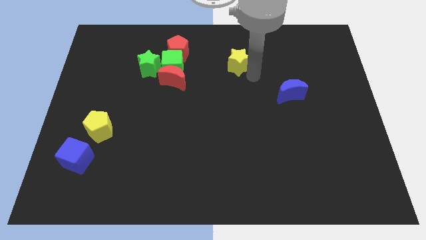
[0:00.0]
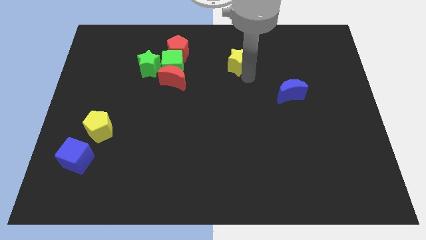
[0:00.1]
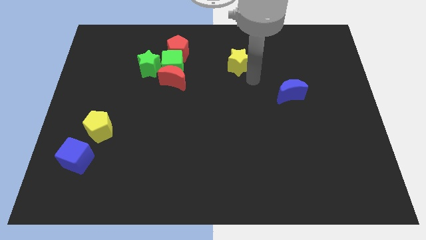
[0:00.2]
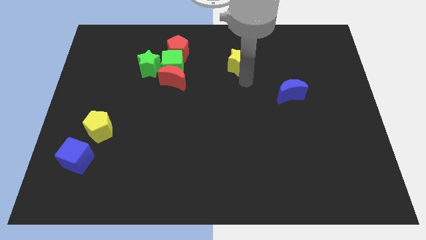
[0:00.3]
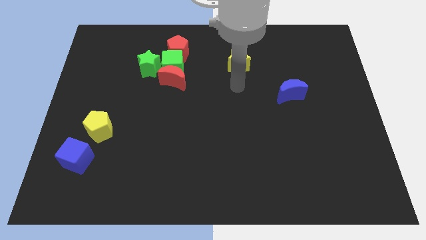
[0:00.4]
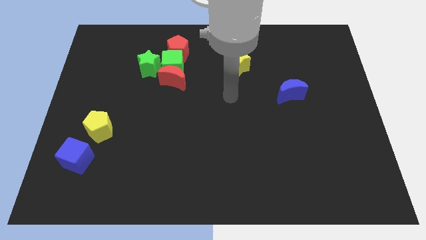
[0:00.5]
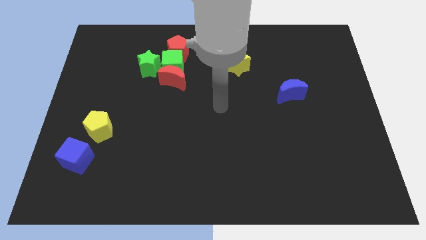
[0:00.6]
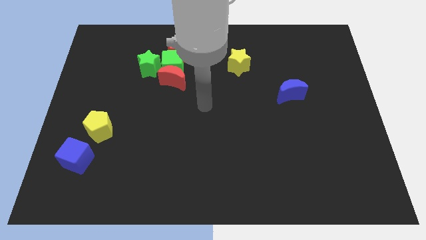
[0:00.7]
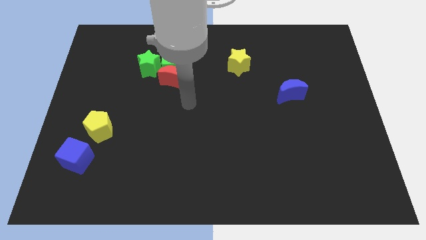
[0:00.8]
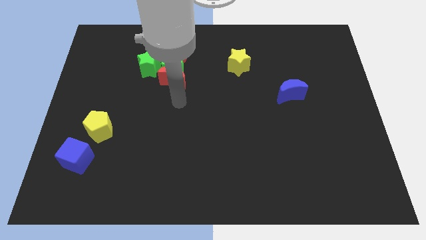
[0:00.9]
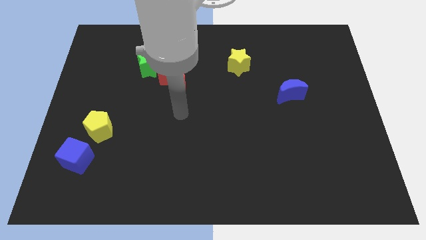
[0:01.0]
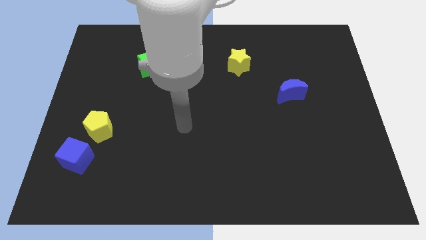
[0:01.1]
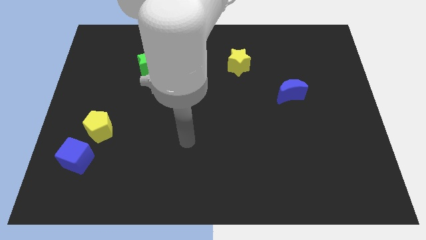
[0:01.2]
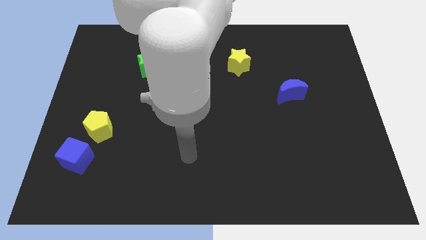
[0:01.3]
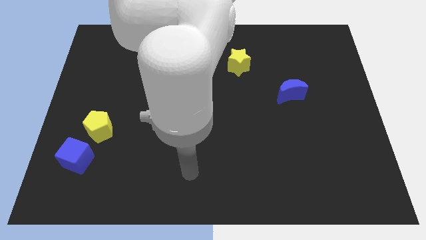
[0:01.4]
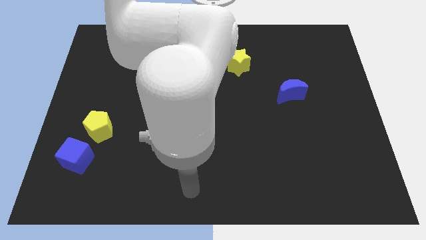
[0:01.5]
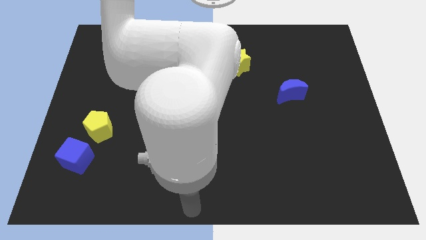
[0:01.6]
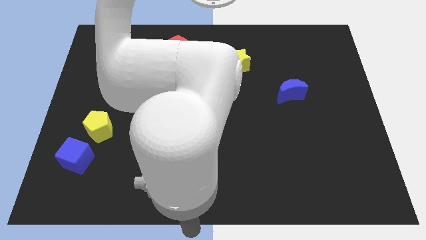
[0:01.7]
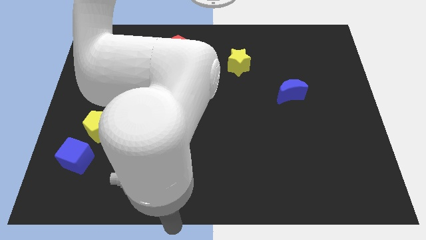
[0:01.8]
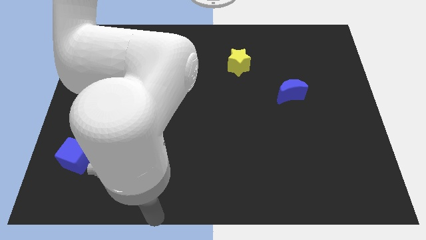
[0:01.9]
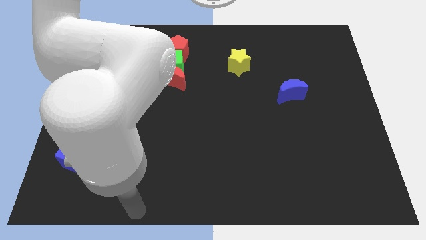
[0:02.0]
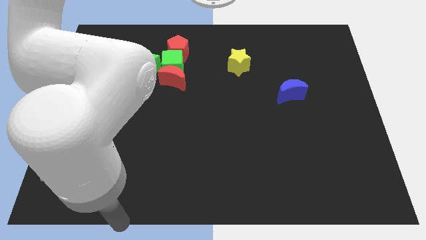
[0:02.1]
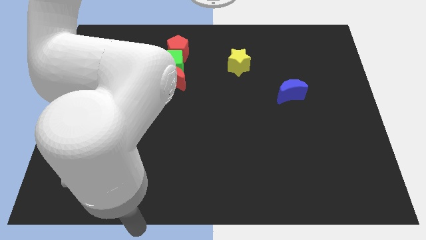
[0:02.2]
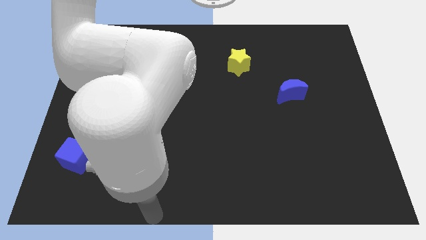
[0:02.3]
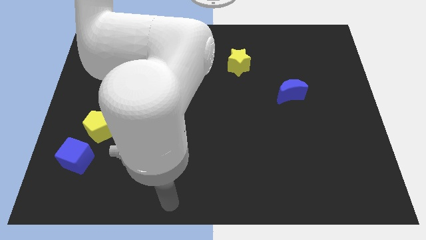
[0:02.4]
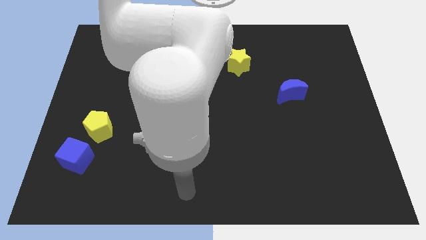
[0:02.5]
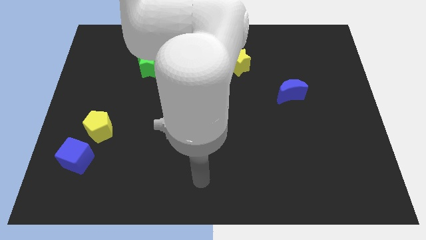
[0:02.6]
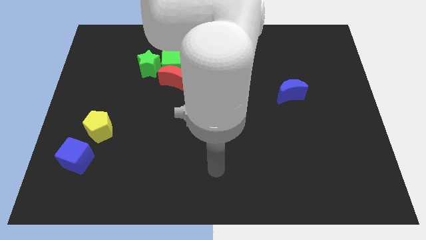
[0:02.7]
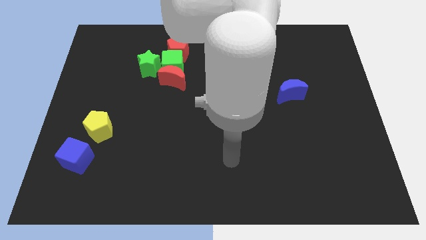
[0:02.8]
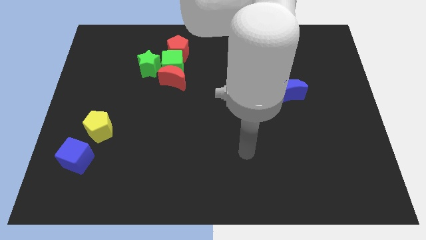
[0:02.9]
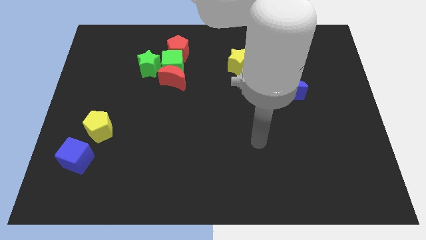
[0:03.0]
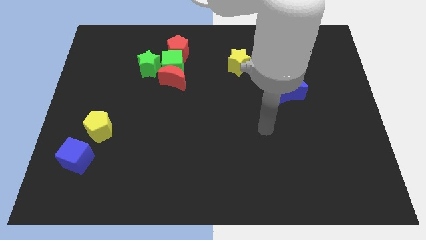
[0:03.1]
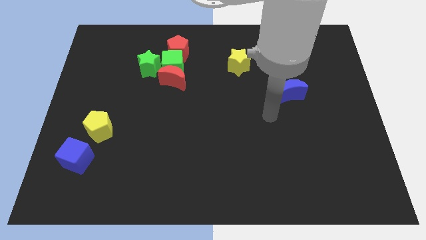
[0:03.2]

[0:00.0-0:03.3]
point your arm at the bottom left side of the blue crescent

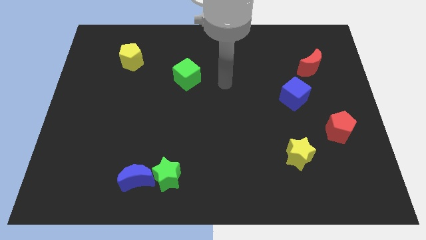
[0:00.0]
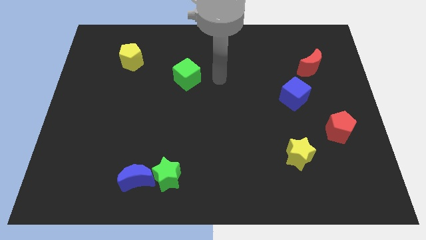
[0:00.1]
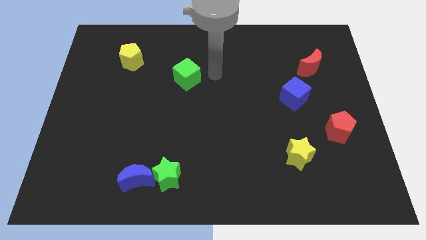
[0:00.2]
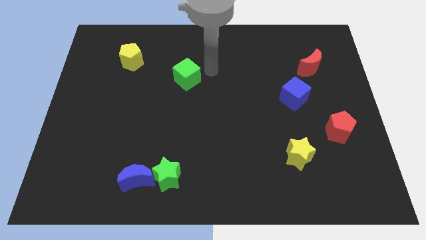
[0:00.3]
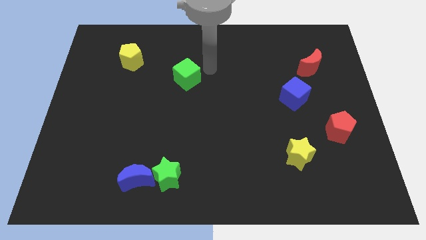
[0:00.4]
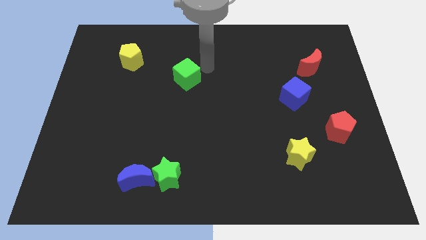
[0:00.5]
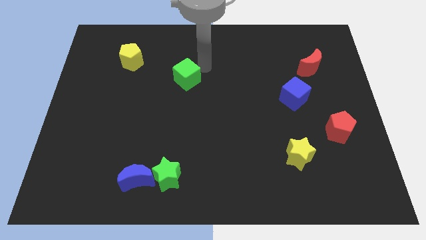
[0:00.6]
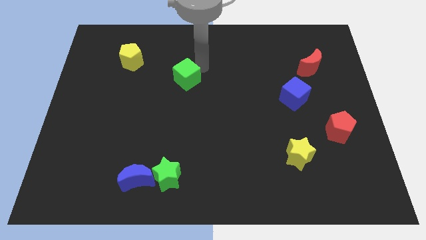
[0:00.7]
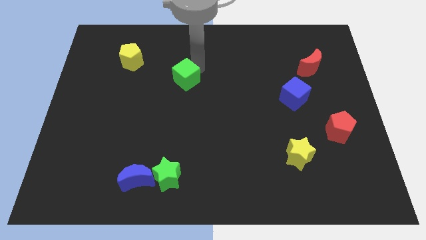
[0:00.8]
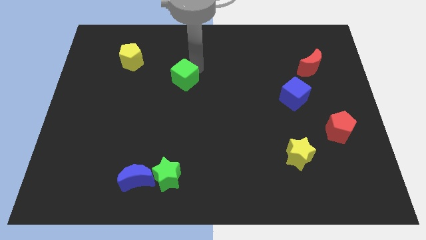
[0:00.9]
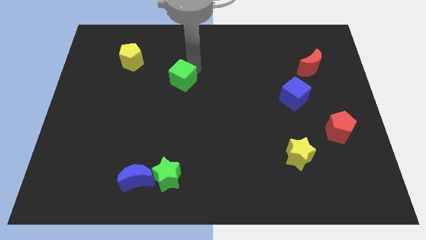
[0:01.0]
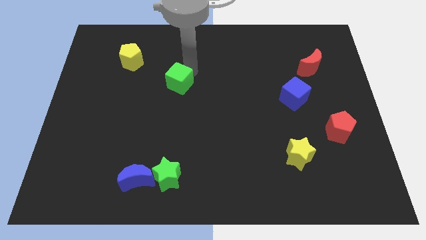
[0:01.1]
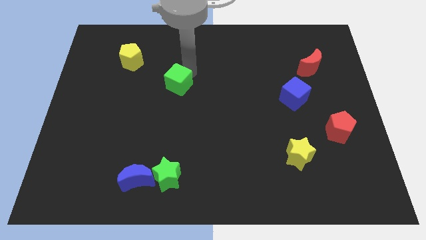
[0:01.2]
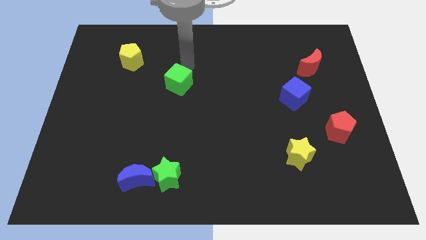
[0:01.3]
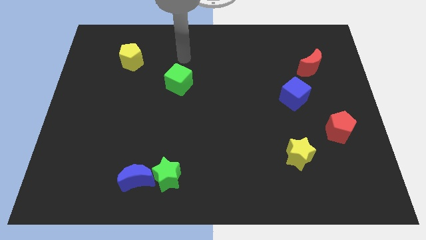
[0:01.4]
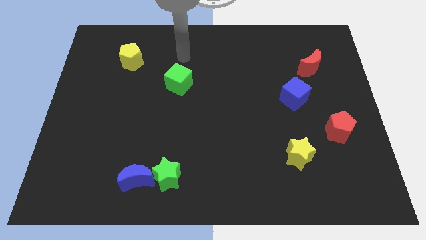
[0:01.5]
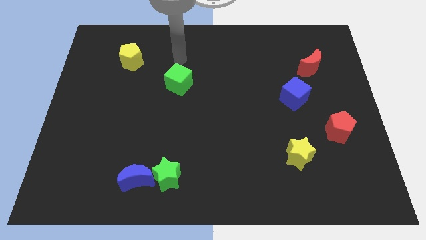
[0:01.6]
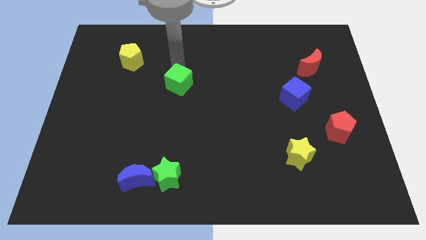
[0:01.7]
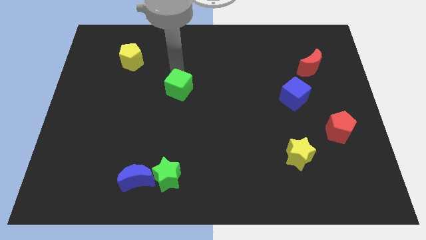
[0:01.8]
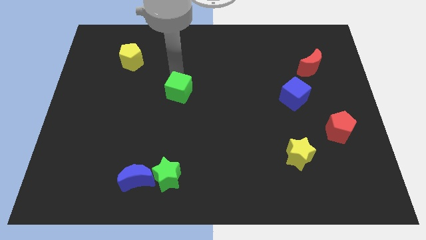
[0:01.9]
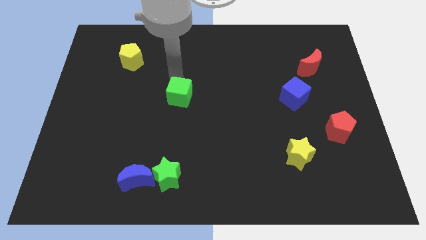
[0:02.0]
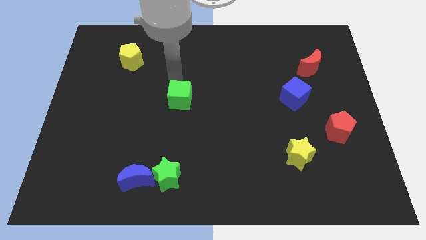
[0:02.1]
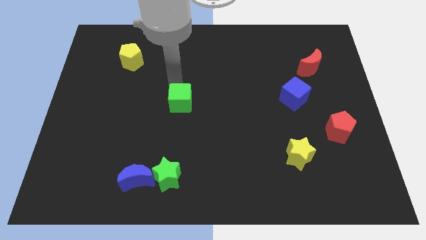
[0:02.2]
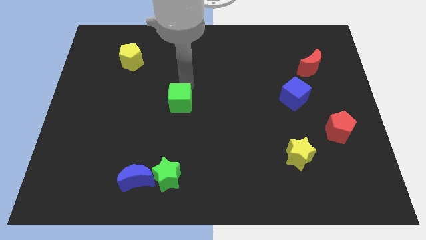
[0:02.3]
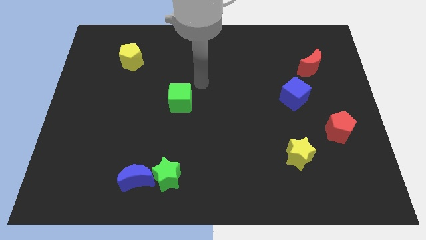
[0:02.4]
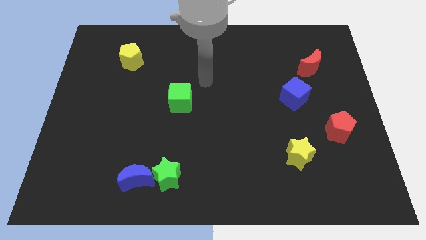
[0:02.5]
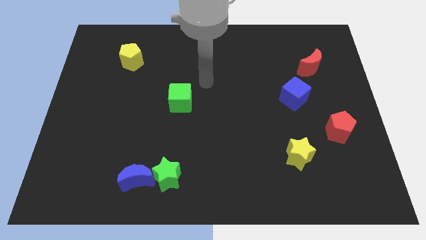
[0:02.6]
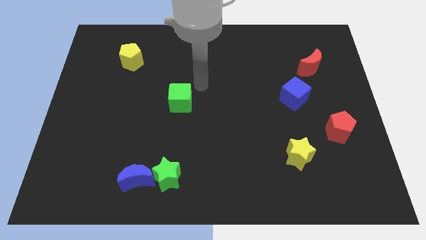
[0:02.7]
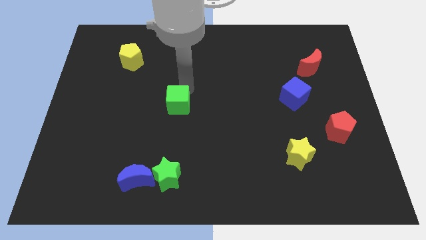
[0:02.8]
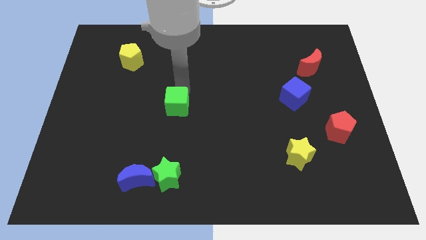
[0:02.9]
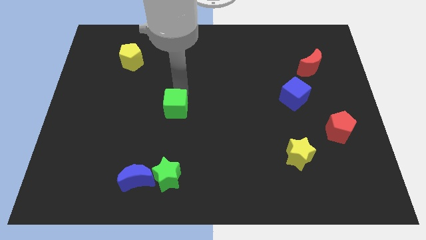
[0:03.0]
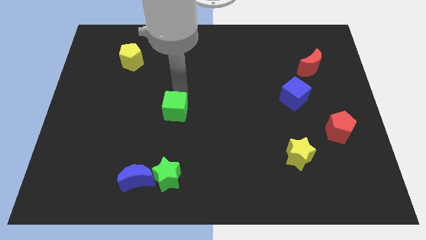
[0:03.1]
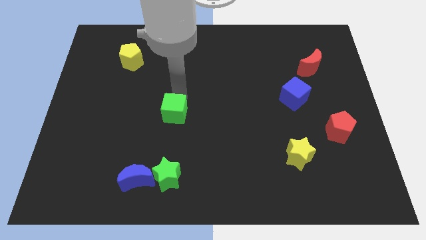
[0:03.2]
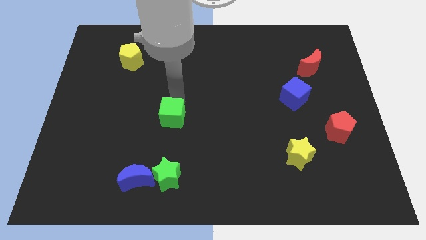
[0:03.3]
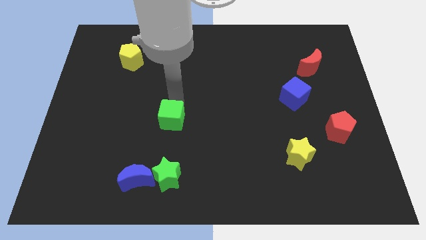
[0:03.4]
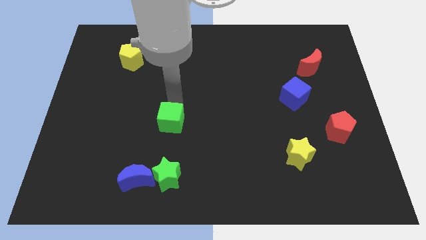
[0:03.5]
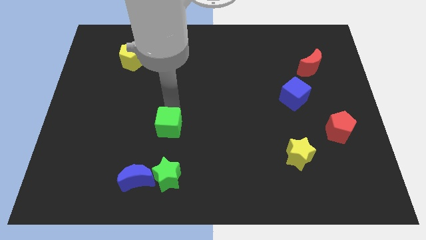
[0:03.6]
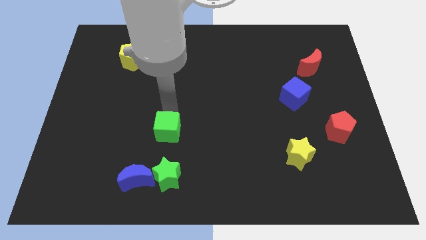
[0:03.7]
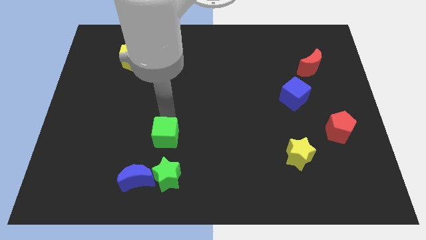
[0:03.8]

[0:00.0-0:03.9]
place the green cube above the green star

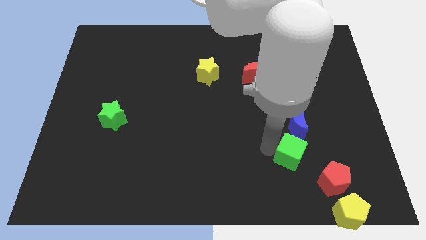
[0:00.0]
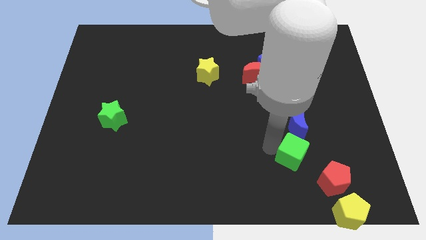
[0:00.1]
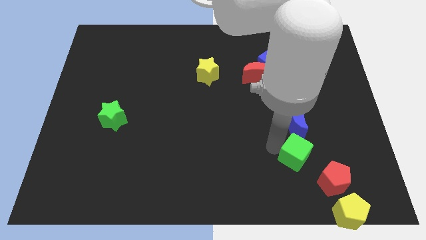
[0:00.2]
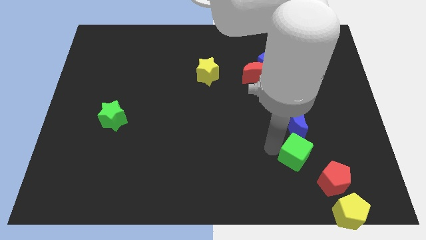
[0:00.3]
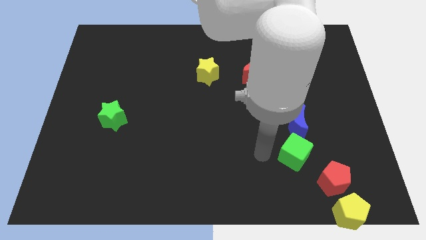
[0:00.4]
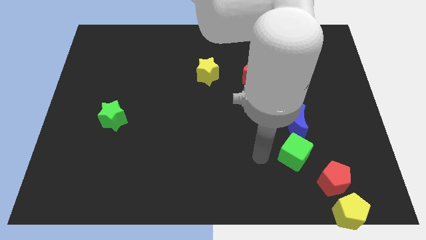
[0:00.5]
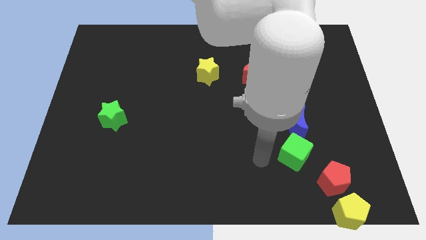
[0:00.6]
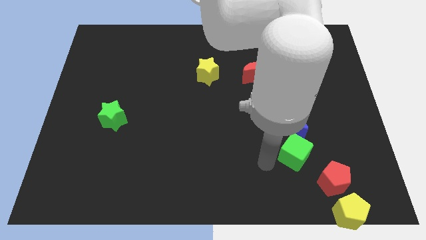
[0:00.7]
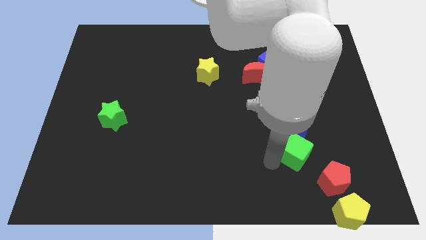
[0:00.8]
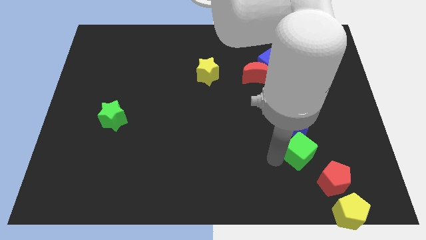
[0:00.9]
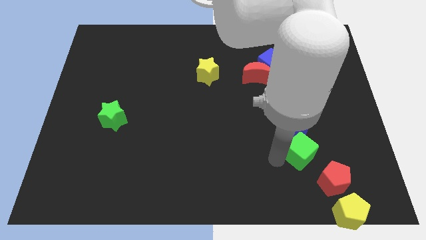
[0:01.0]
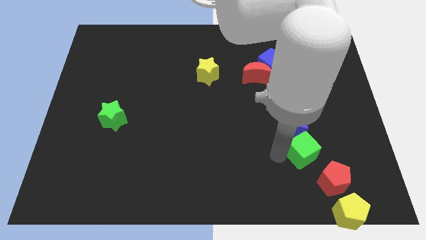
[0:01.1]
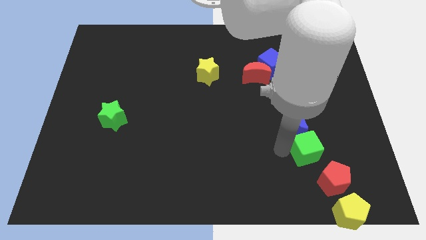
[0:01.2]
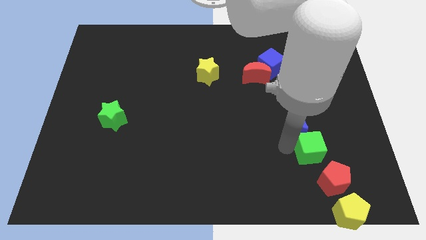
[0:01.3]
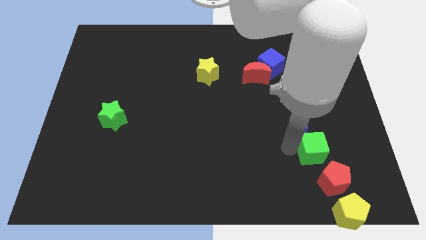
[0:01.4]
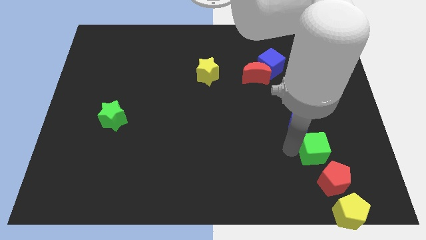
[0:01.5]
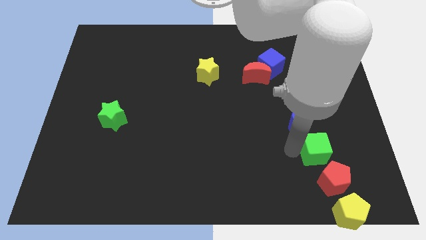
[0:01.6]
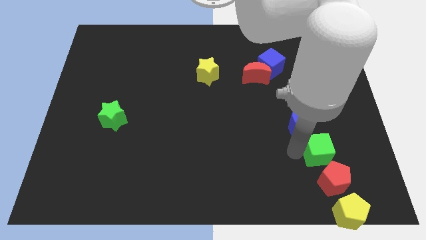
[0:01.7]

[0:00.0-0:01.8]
place the green cube between the red pentagon and blue moon
